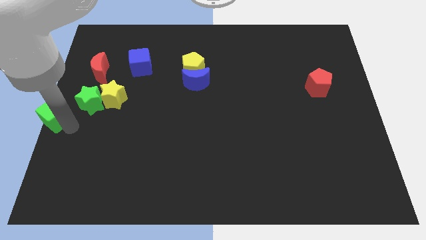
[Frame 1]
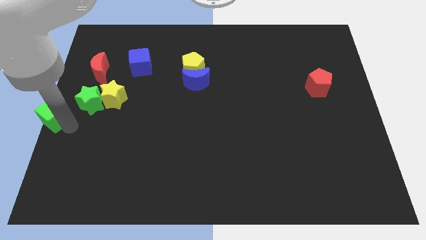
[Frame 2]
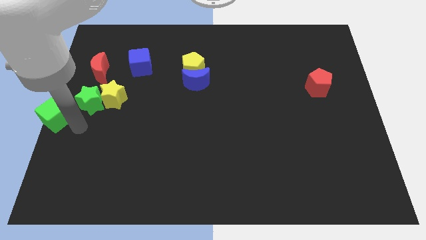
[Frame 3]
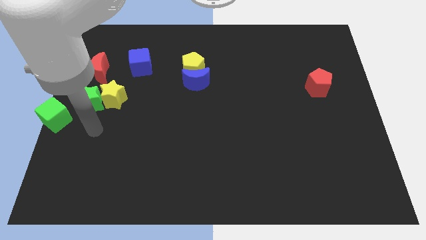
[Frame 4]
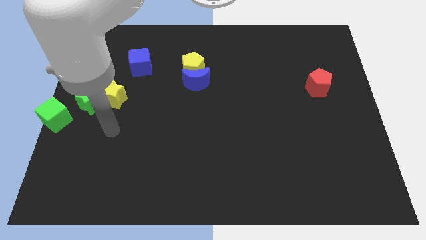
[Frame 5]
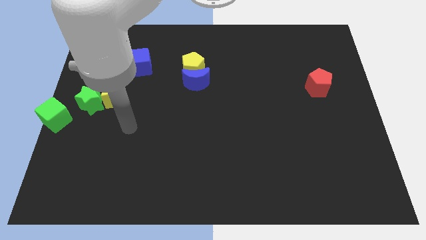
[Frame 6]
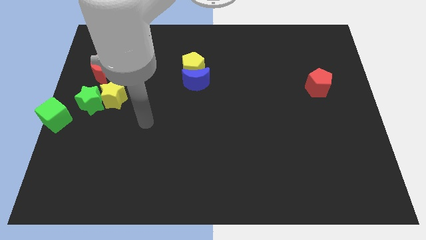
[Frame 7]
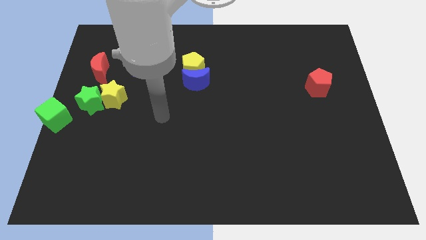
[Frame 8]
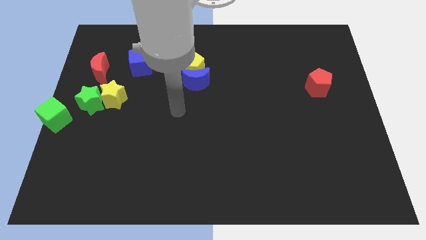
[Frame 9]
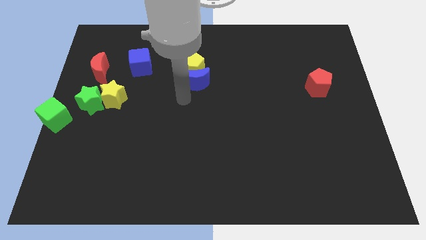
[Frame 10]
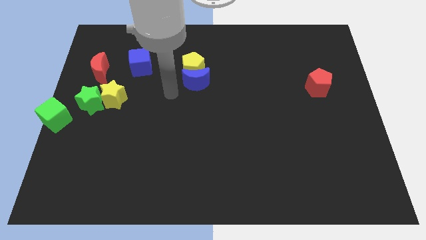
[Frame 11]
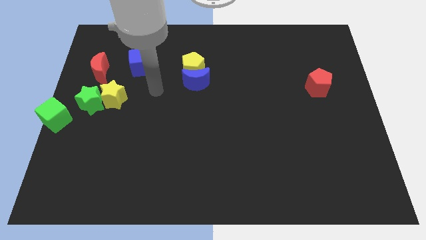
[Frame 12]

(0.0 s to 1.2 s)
move the arm away from the green cube

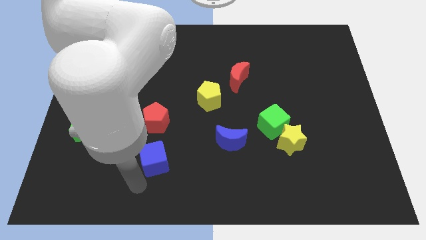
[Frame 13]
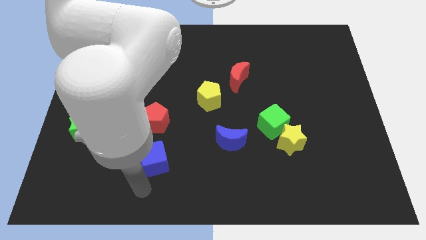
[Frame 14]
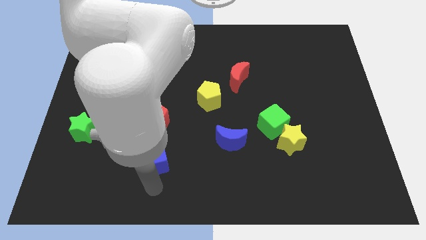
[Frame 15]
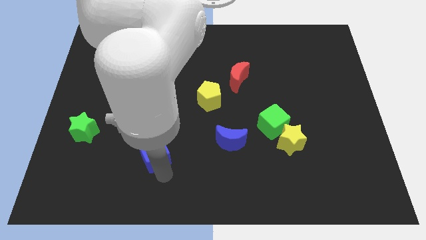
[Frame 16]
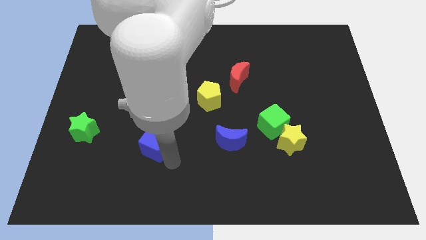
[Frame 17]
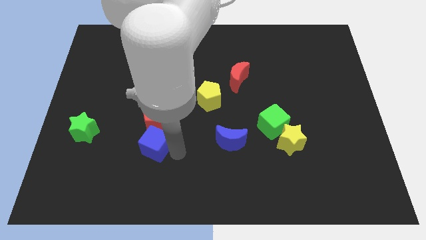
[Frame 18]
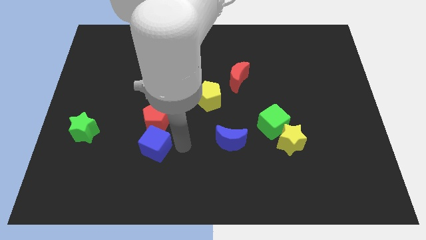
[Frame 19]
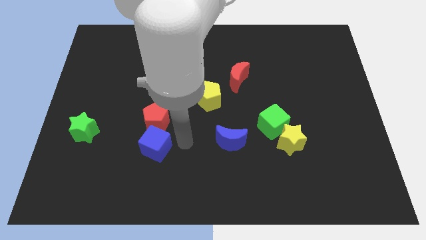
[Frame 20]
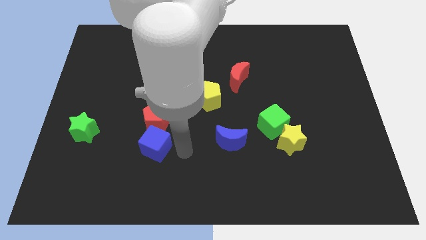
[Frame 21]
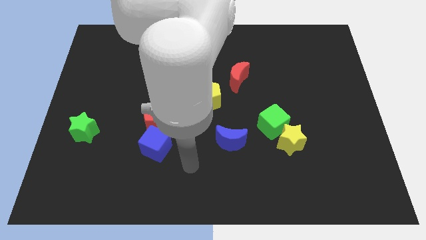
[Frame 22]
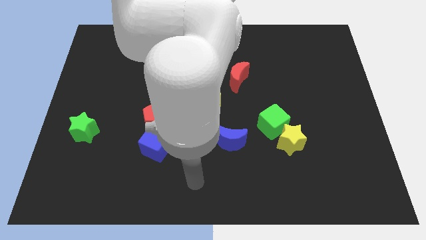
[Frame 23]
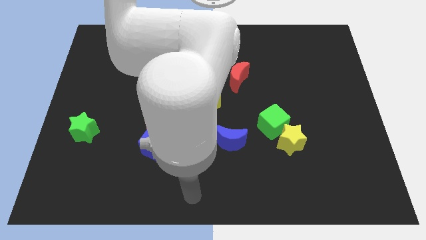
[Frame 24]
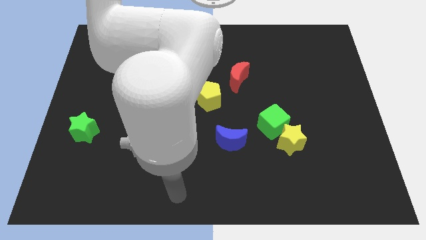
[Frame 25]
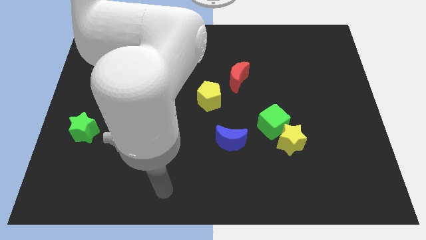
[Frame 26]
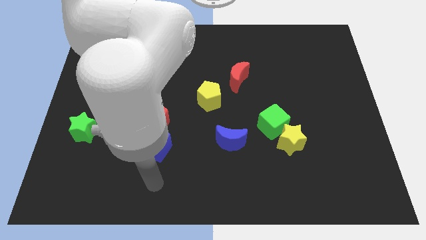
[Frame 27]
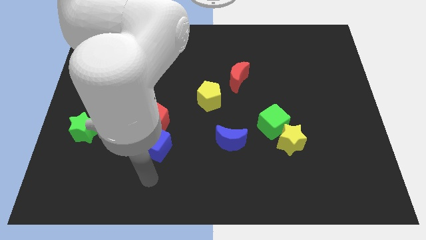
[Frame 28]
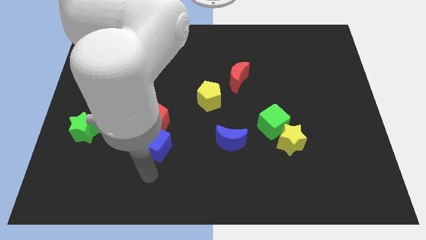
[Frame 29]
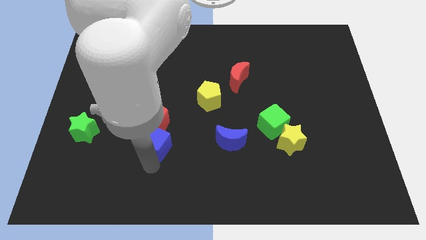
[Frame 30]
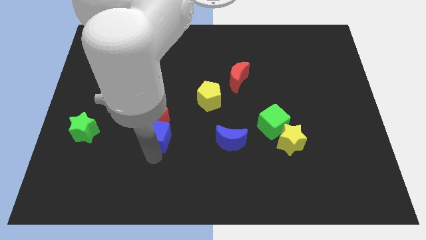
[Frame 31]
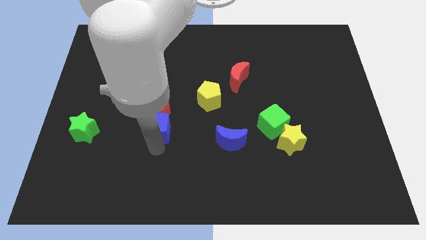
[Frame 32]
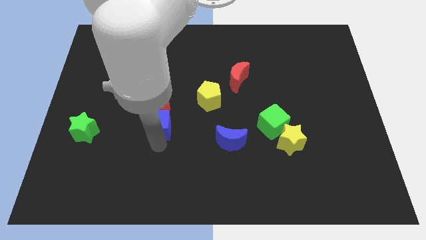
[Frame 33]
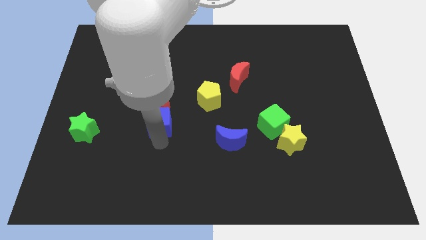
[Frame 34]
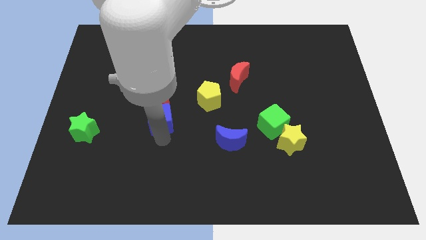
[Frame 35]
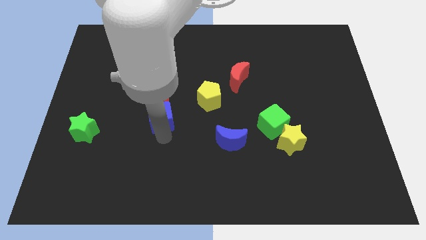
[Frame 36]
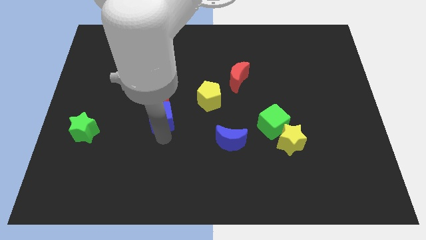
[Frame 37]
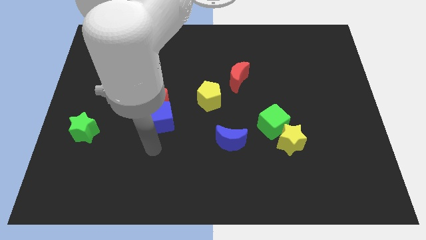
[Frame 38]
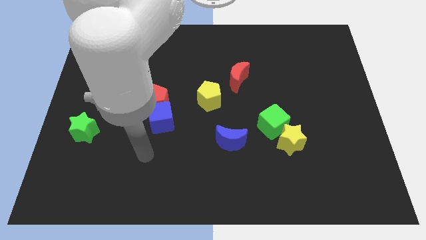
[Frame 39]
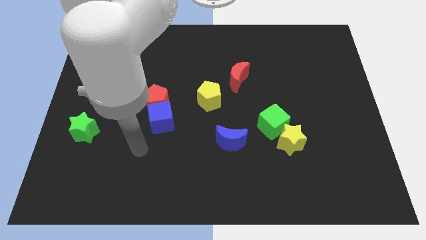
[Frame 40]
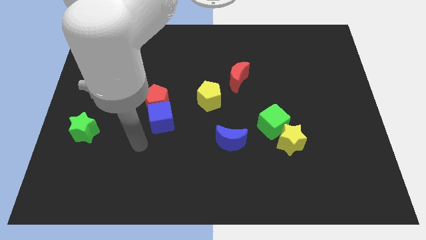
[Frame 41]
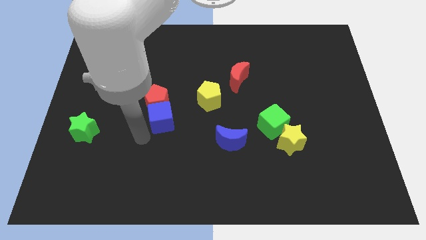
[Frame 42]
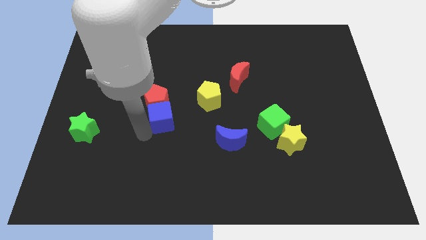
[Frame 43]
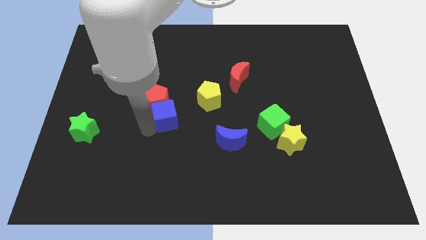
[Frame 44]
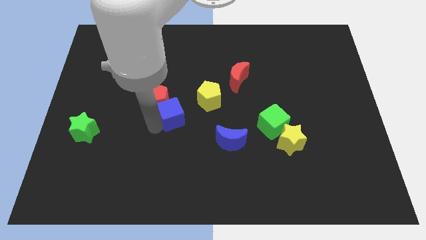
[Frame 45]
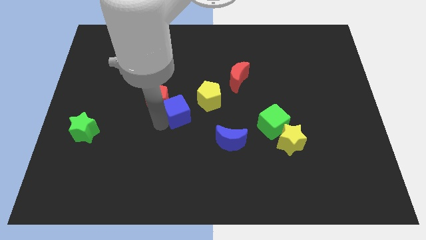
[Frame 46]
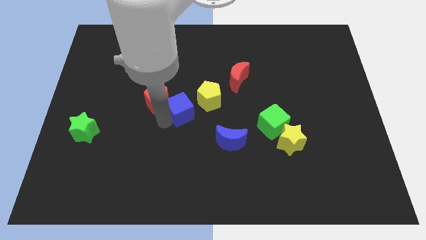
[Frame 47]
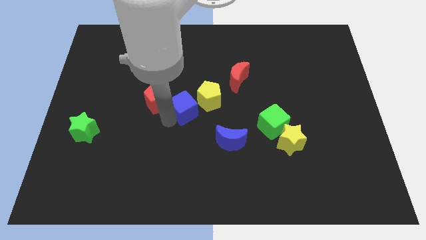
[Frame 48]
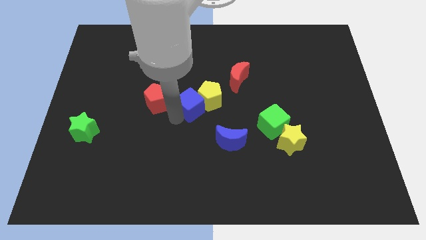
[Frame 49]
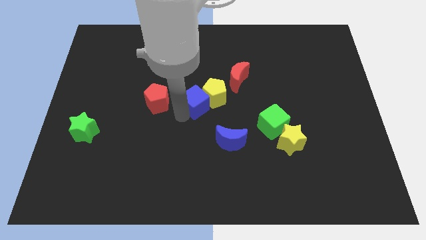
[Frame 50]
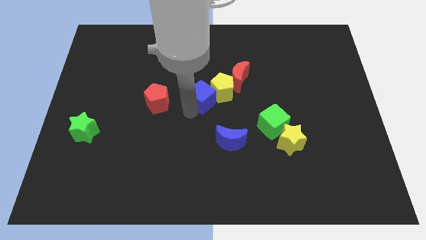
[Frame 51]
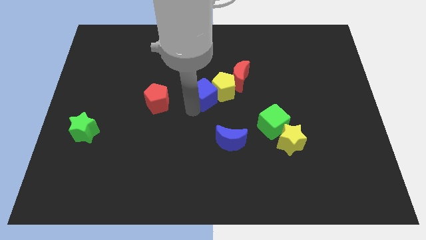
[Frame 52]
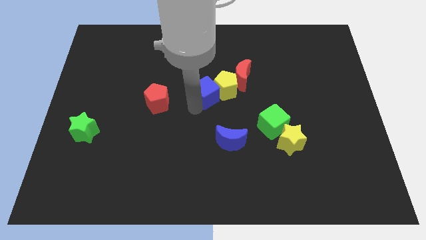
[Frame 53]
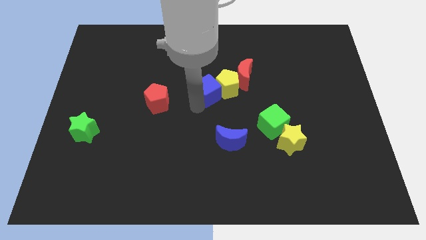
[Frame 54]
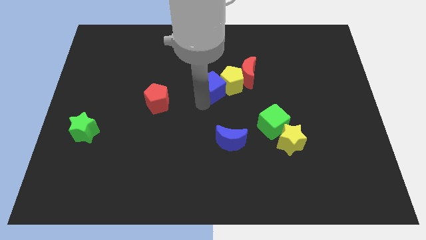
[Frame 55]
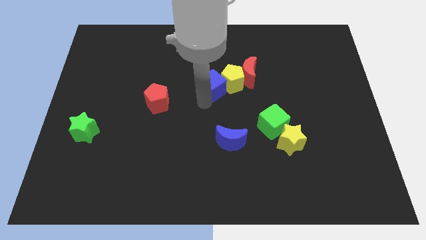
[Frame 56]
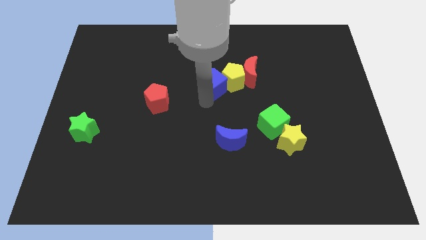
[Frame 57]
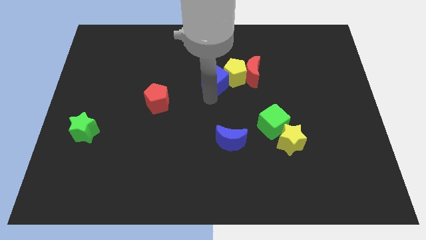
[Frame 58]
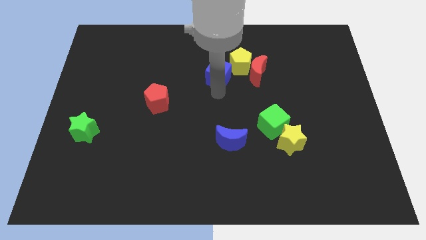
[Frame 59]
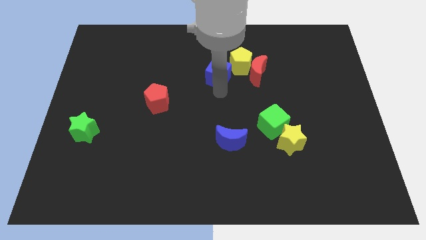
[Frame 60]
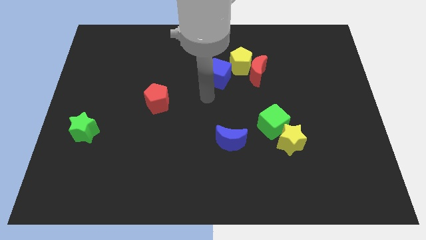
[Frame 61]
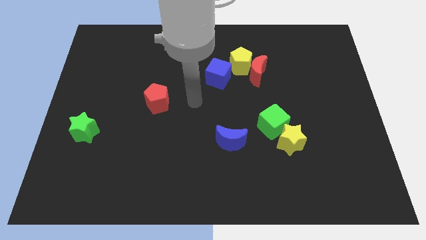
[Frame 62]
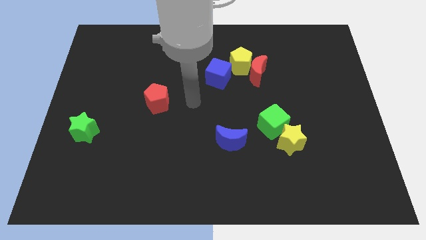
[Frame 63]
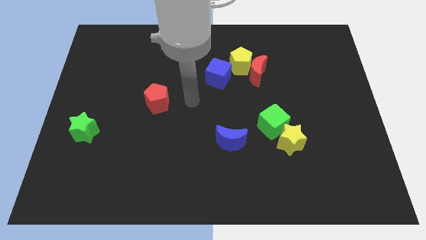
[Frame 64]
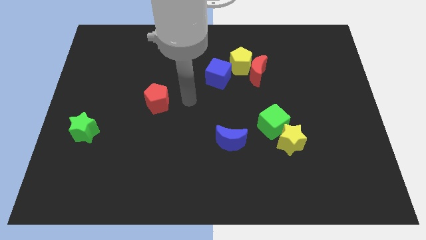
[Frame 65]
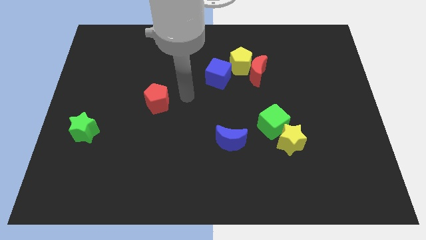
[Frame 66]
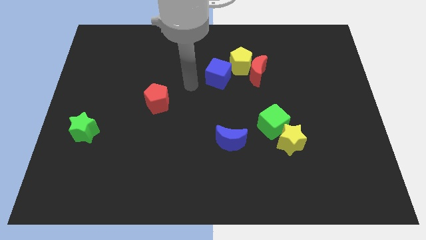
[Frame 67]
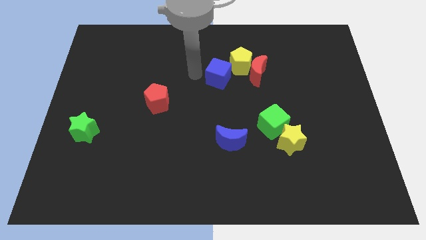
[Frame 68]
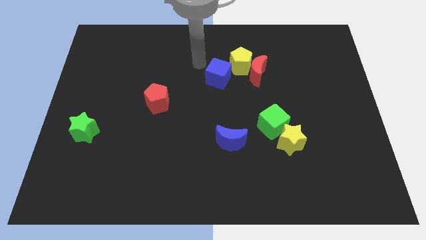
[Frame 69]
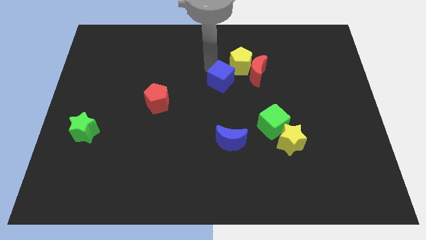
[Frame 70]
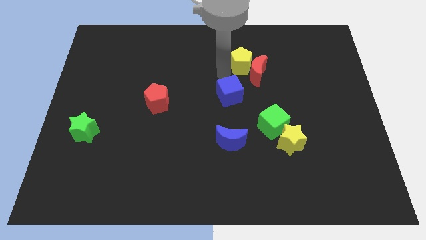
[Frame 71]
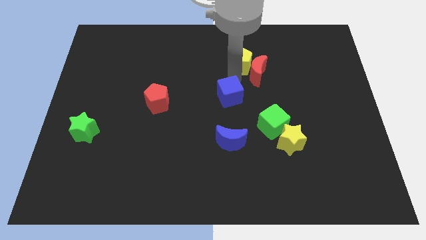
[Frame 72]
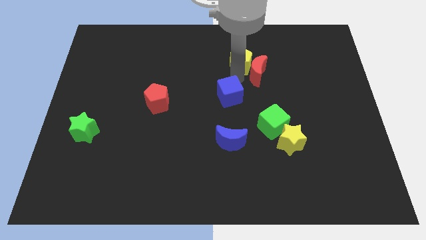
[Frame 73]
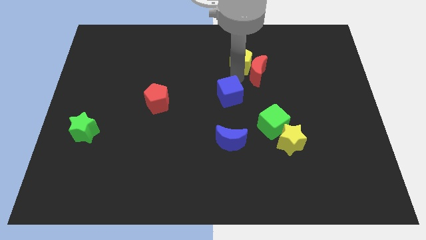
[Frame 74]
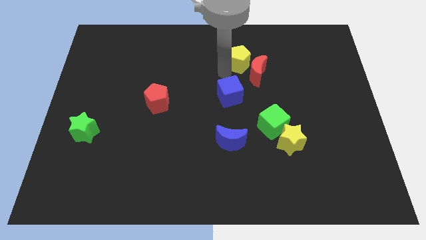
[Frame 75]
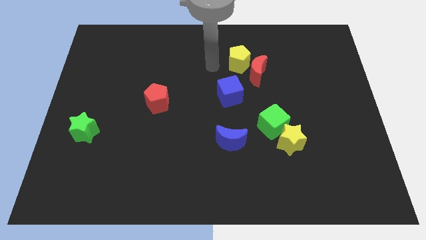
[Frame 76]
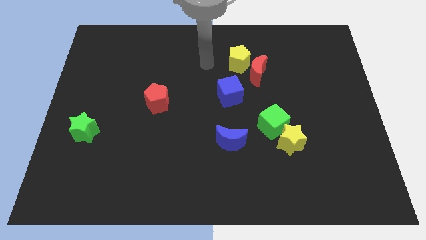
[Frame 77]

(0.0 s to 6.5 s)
move the blue cube to the below of the yellow pentagon

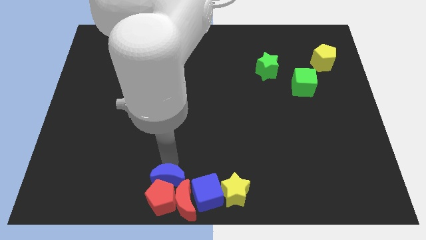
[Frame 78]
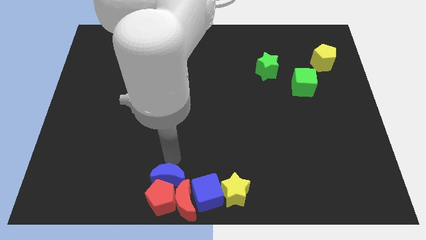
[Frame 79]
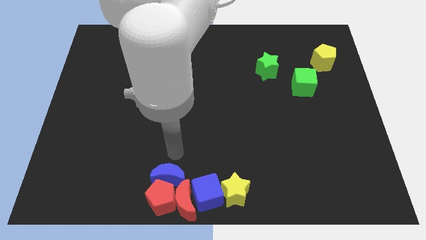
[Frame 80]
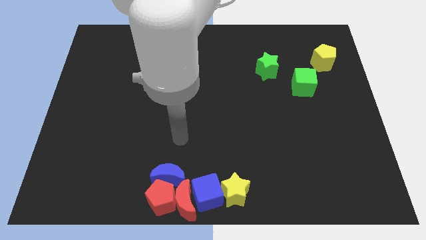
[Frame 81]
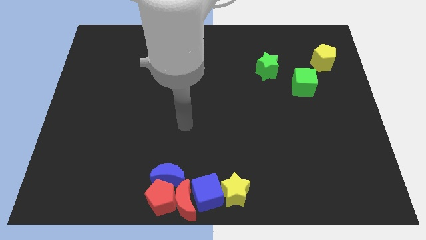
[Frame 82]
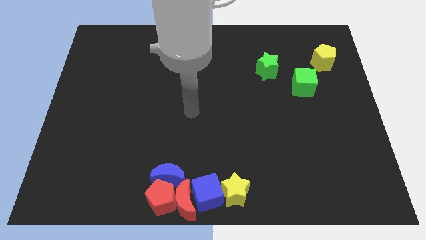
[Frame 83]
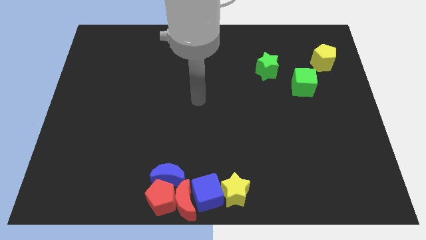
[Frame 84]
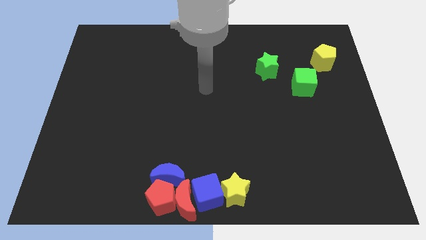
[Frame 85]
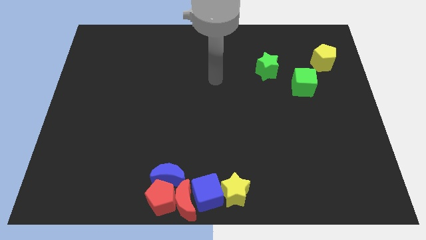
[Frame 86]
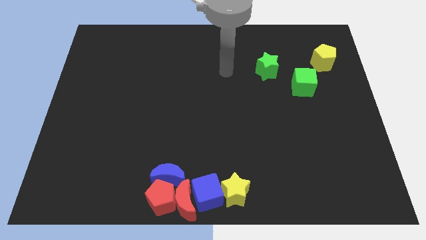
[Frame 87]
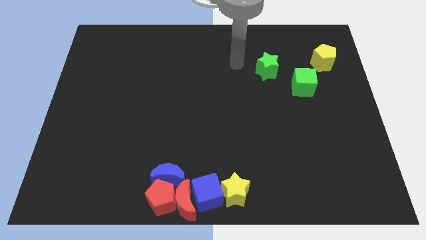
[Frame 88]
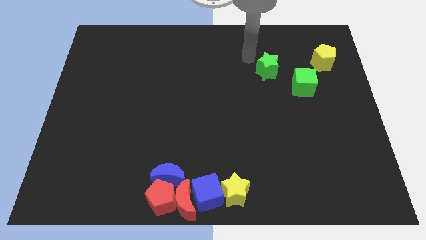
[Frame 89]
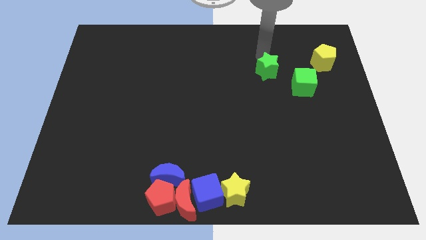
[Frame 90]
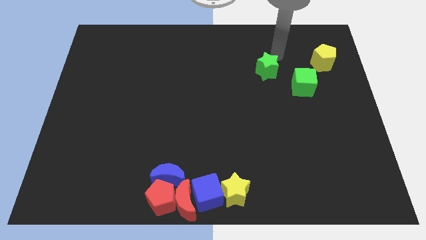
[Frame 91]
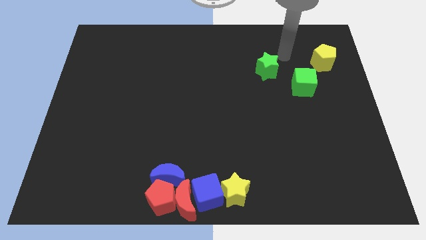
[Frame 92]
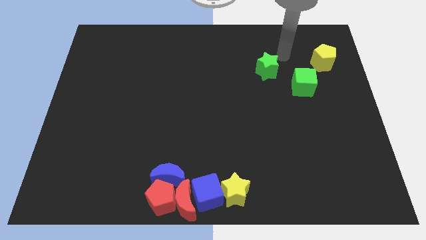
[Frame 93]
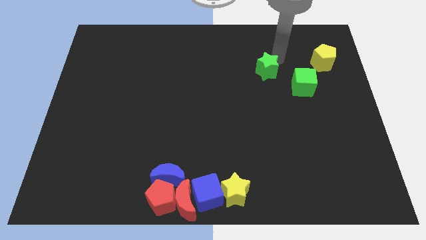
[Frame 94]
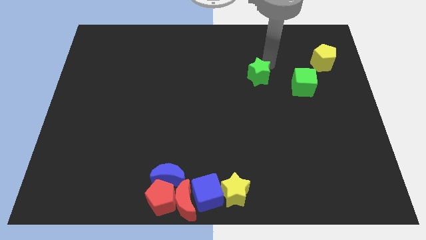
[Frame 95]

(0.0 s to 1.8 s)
place the arm above the green star
